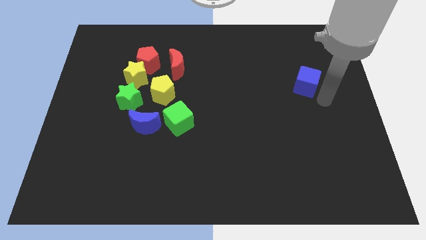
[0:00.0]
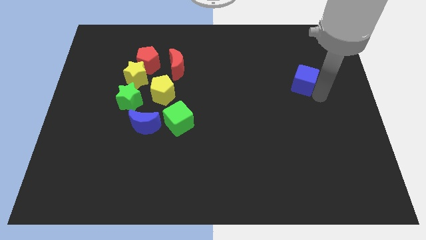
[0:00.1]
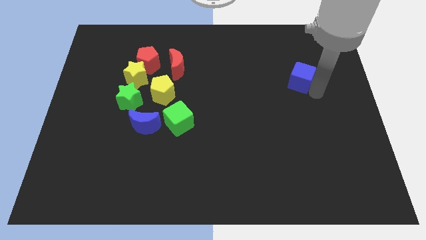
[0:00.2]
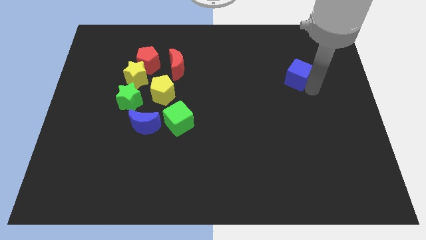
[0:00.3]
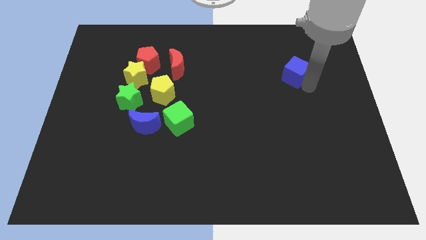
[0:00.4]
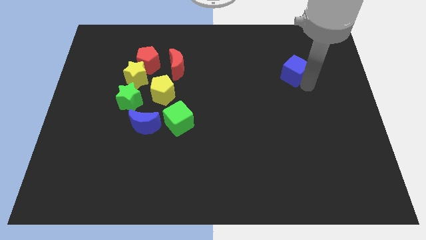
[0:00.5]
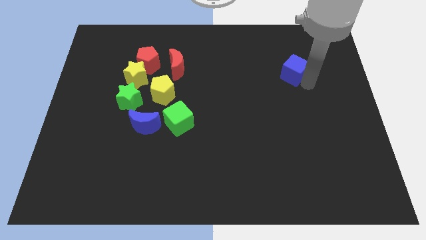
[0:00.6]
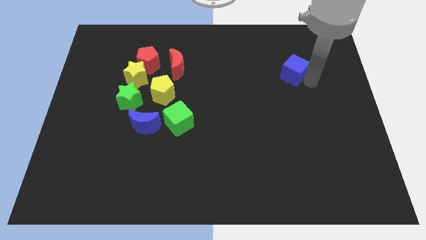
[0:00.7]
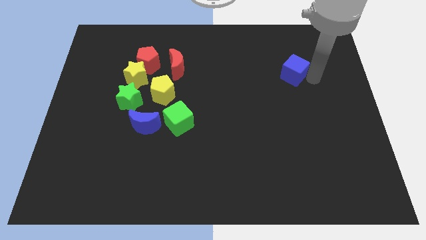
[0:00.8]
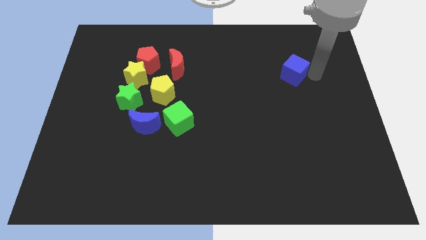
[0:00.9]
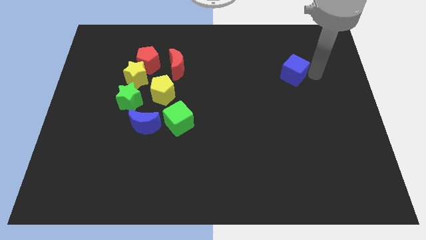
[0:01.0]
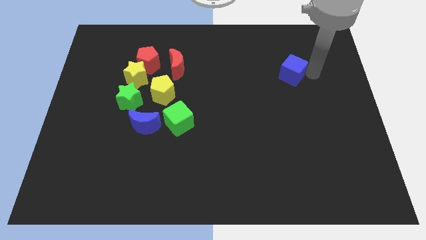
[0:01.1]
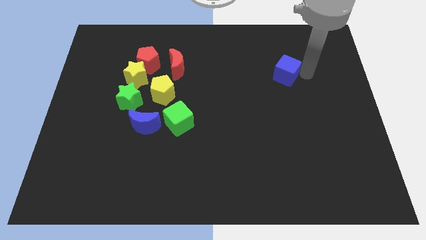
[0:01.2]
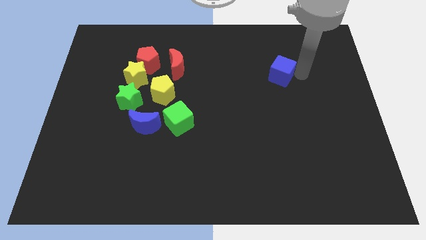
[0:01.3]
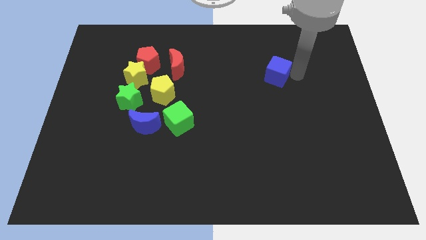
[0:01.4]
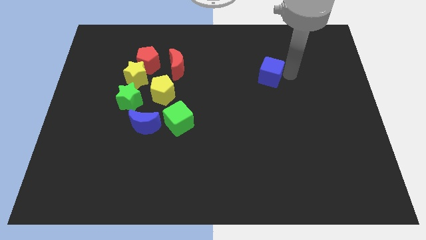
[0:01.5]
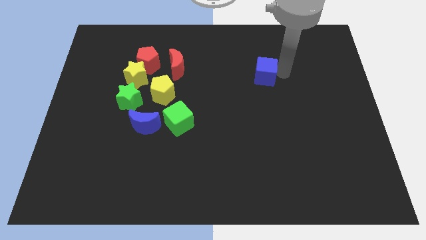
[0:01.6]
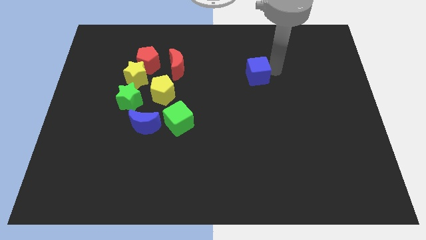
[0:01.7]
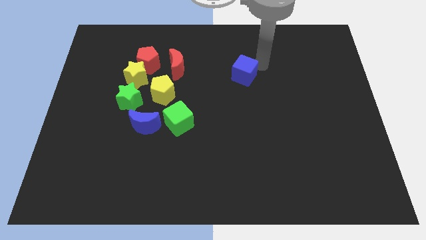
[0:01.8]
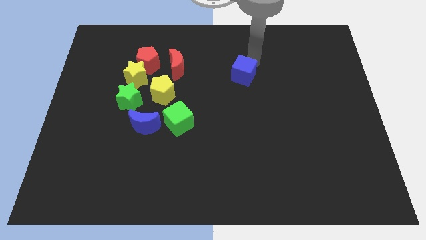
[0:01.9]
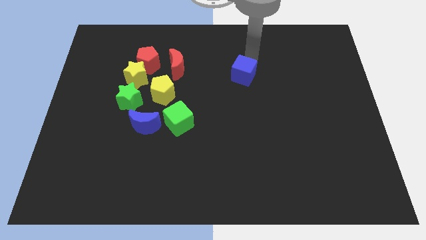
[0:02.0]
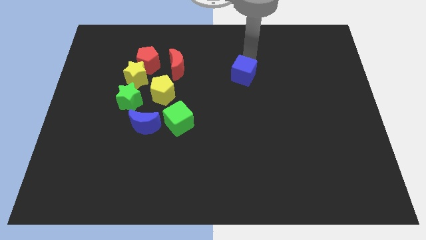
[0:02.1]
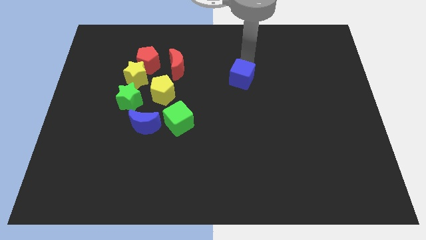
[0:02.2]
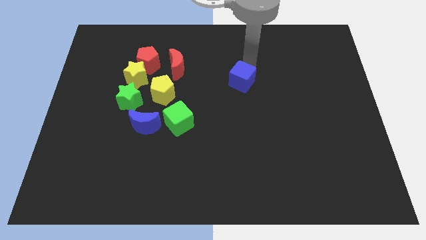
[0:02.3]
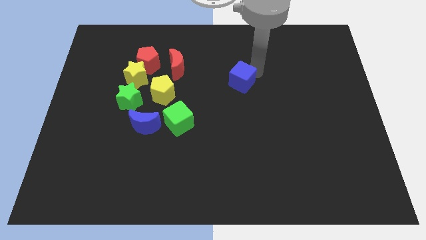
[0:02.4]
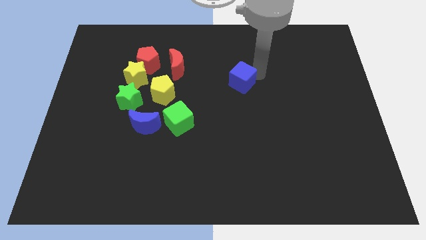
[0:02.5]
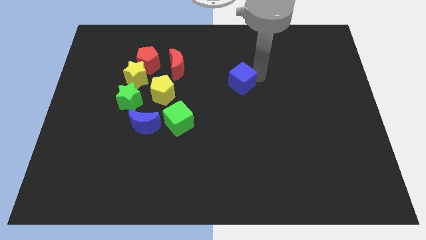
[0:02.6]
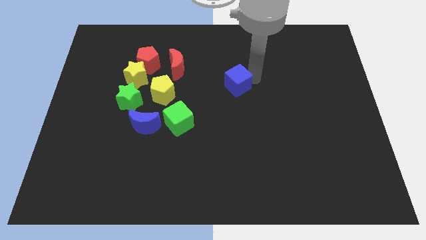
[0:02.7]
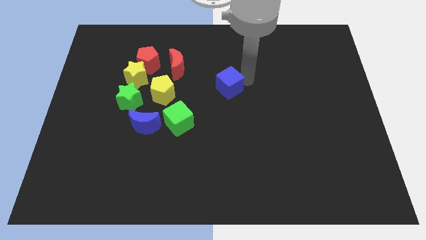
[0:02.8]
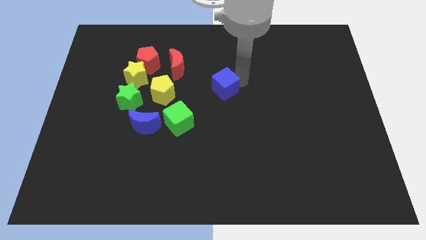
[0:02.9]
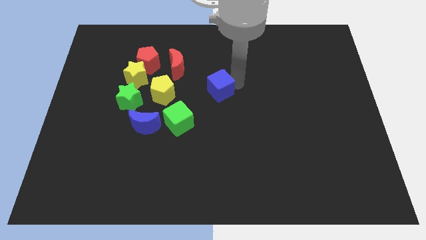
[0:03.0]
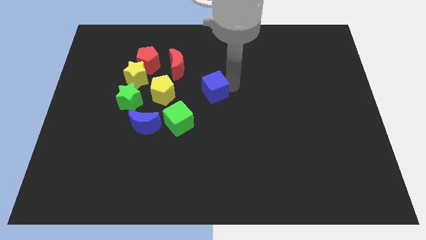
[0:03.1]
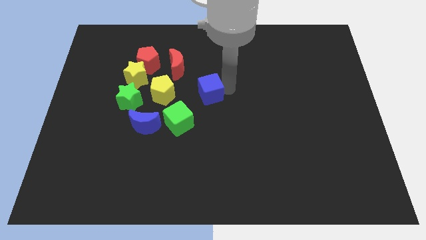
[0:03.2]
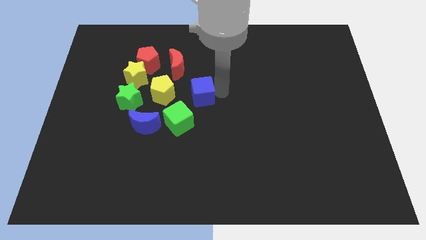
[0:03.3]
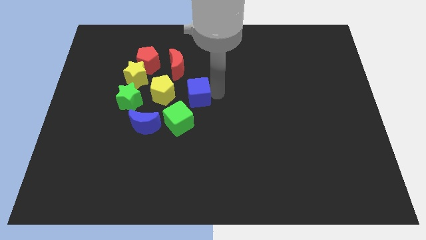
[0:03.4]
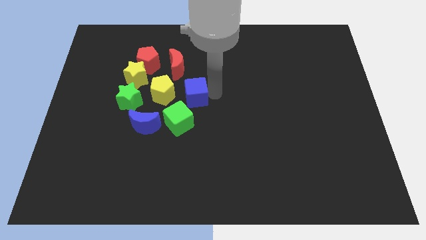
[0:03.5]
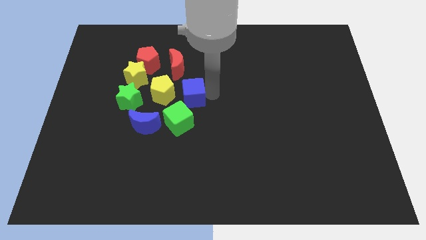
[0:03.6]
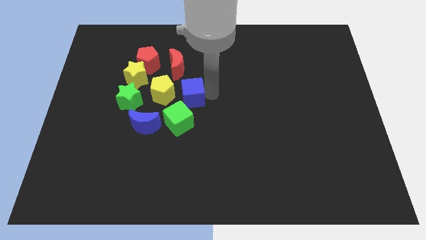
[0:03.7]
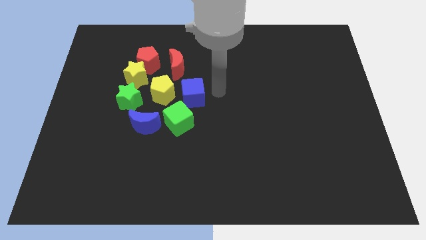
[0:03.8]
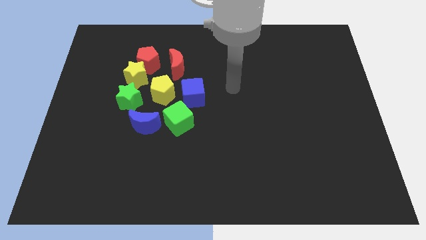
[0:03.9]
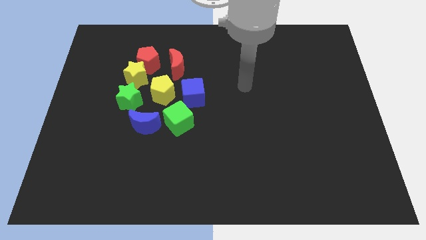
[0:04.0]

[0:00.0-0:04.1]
move the blue cube right to the yellow pentagon to the center of the board

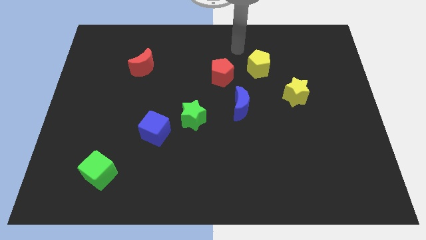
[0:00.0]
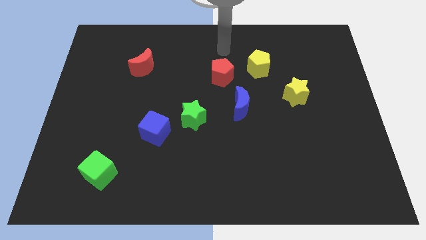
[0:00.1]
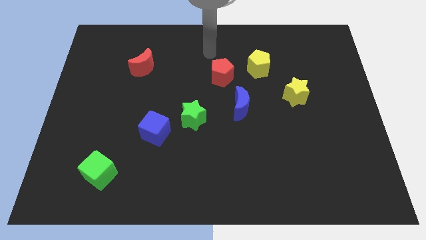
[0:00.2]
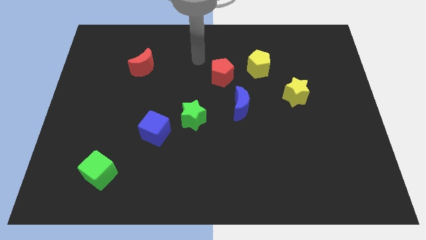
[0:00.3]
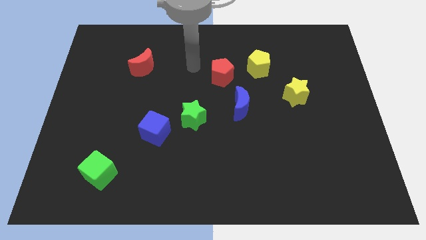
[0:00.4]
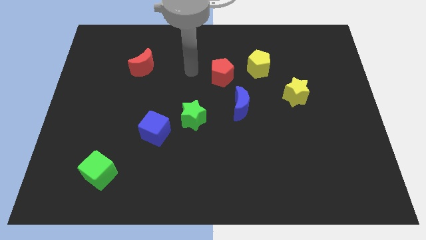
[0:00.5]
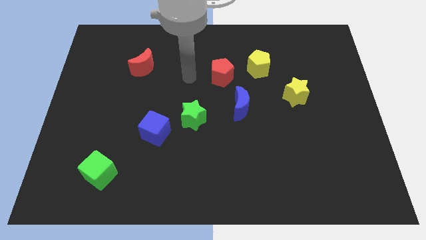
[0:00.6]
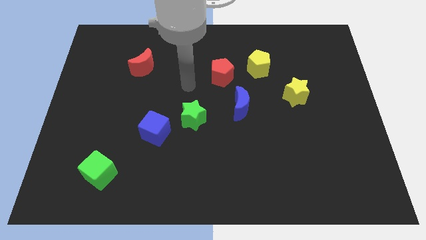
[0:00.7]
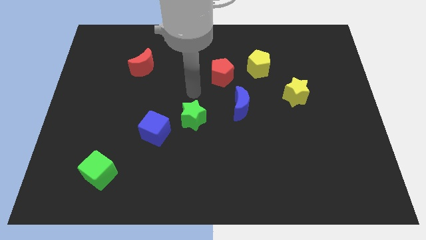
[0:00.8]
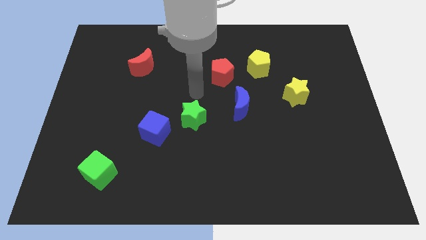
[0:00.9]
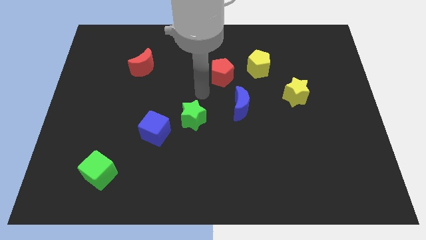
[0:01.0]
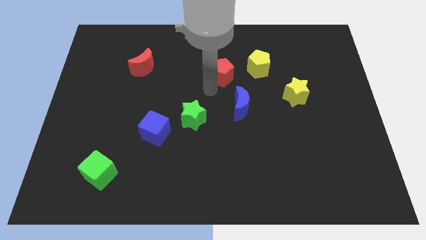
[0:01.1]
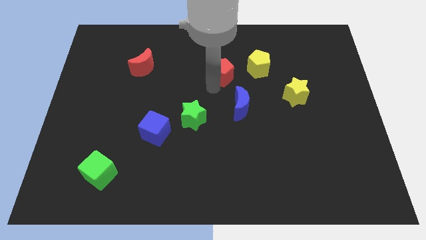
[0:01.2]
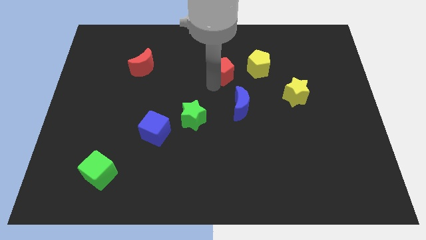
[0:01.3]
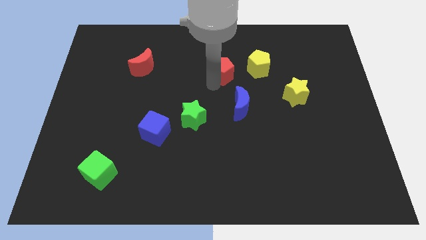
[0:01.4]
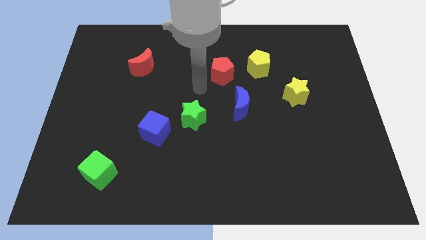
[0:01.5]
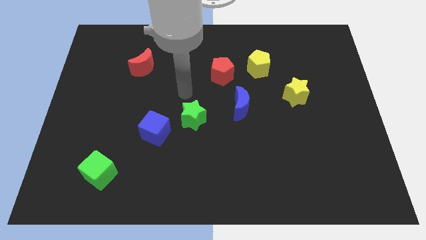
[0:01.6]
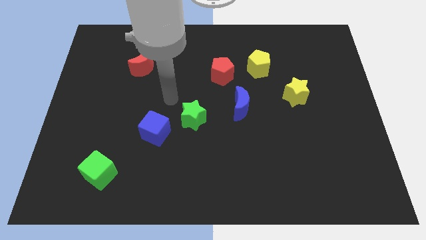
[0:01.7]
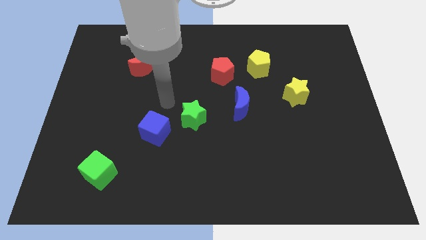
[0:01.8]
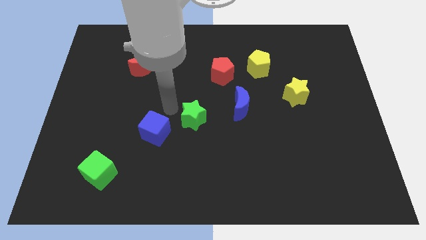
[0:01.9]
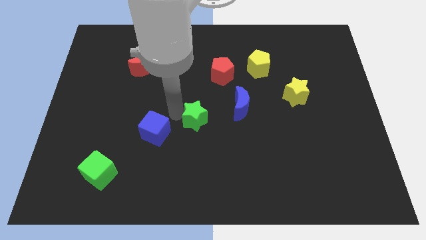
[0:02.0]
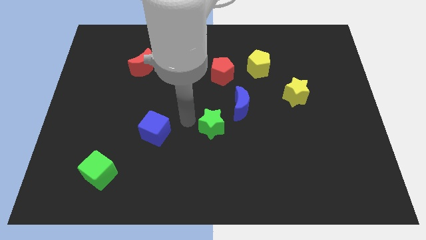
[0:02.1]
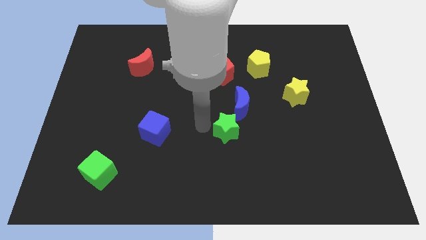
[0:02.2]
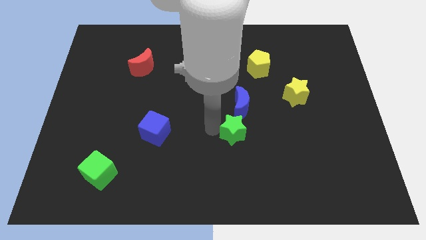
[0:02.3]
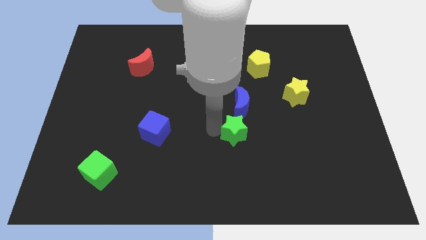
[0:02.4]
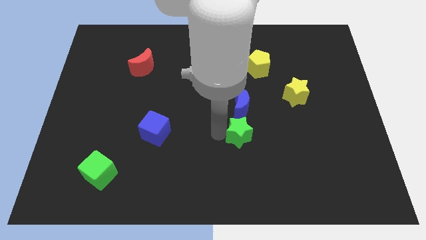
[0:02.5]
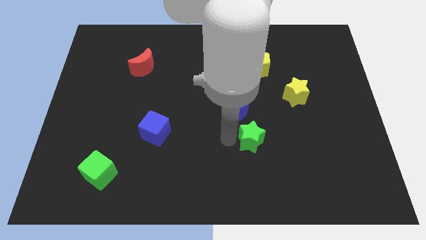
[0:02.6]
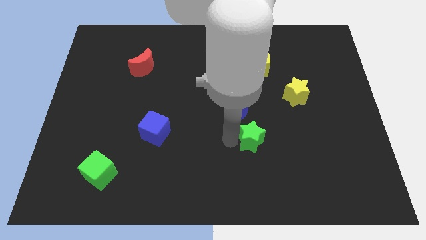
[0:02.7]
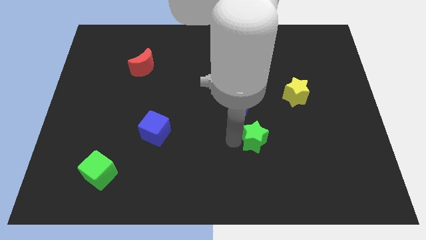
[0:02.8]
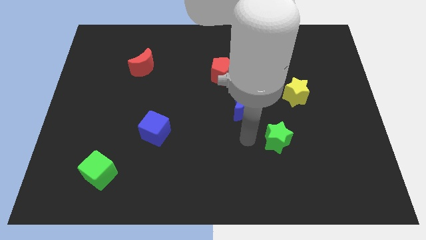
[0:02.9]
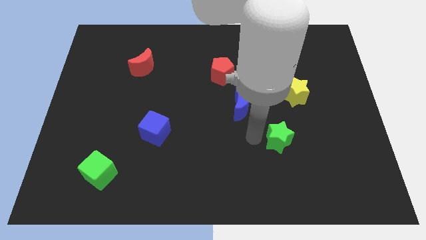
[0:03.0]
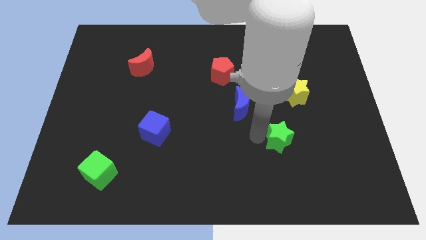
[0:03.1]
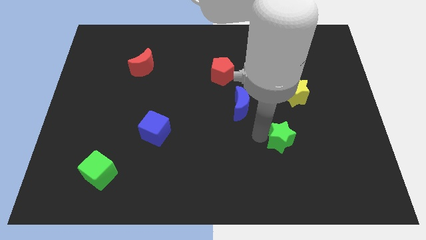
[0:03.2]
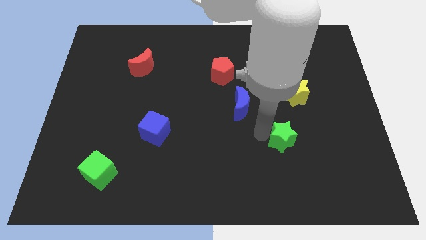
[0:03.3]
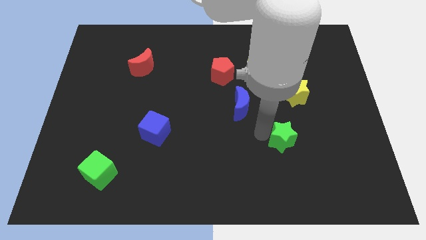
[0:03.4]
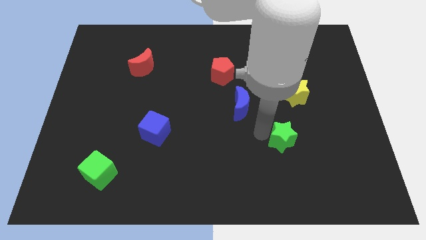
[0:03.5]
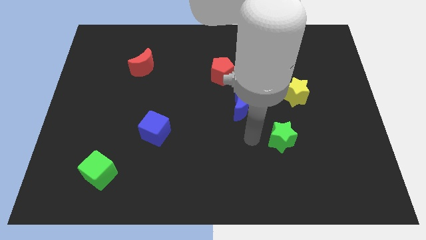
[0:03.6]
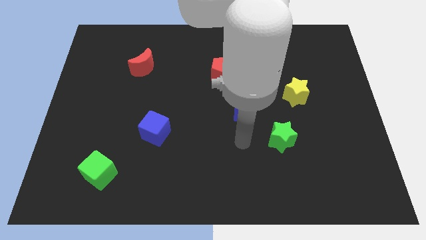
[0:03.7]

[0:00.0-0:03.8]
move the green star to the bottom right of the board

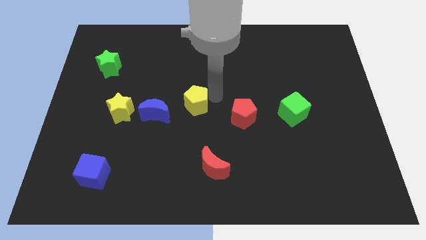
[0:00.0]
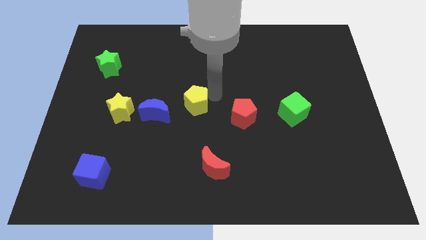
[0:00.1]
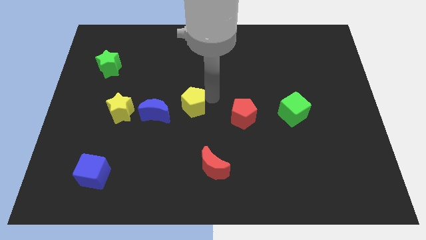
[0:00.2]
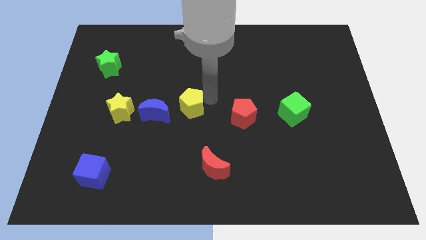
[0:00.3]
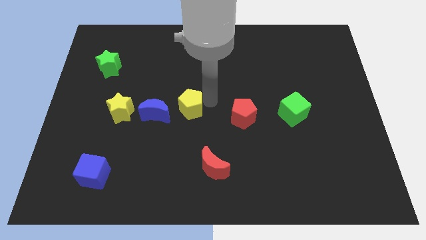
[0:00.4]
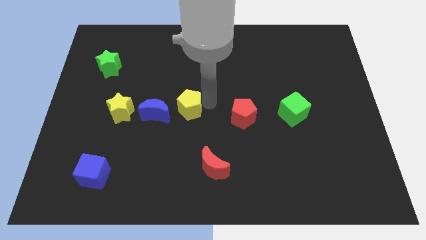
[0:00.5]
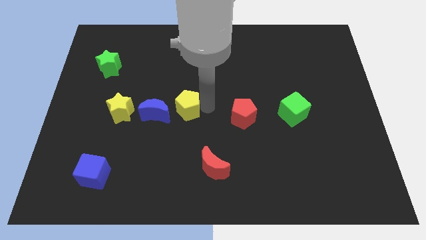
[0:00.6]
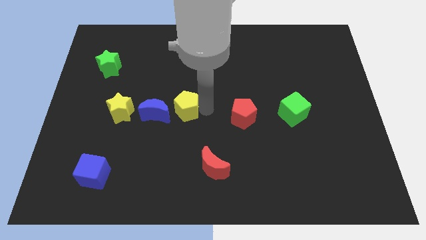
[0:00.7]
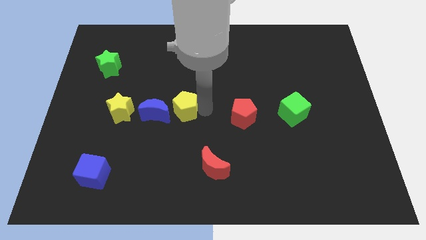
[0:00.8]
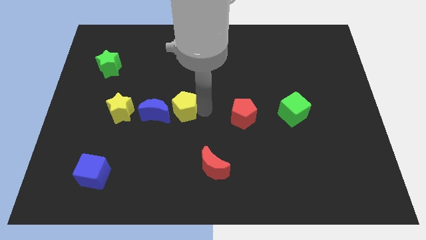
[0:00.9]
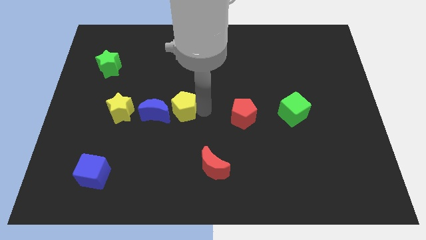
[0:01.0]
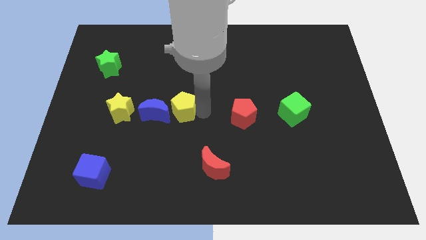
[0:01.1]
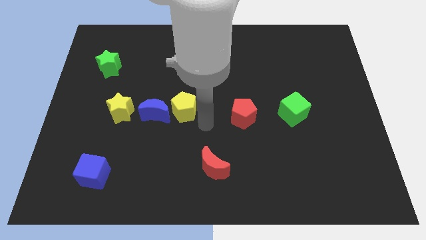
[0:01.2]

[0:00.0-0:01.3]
place the yellow pentagon right to the blue moon
